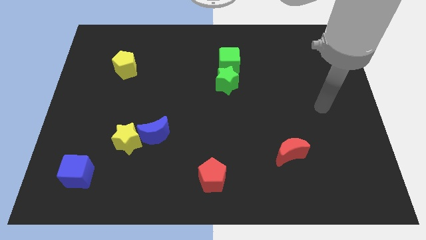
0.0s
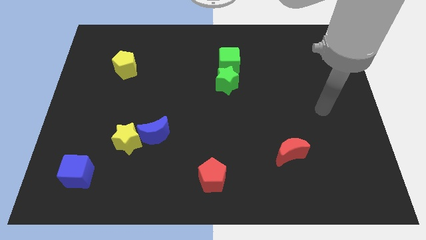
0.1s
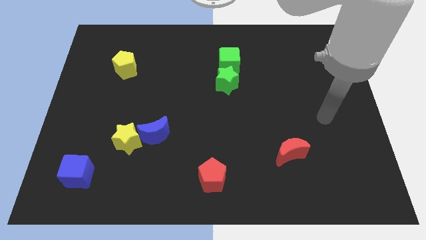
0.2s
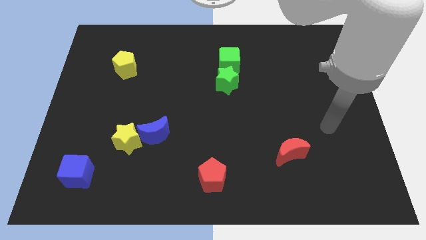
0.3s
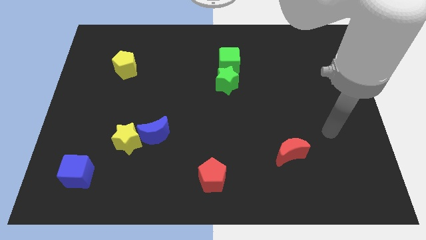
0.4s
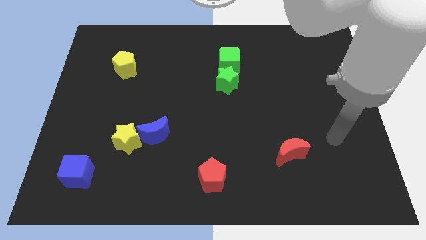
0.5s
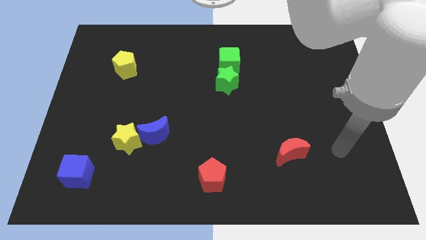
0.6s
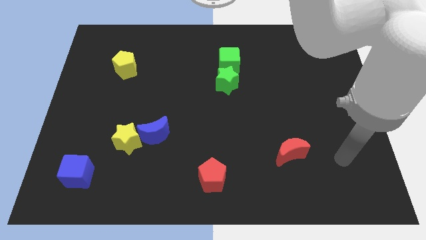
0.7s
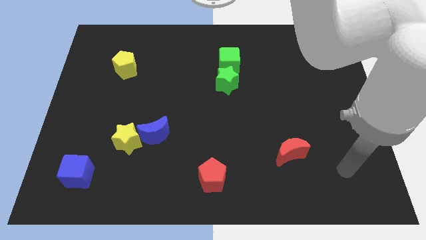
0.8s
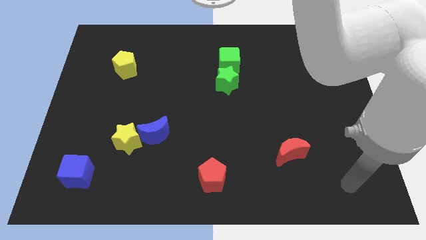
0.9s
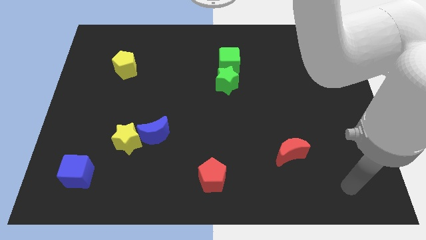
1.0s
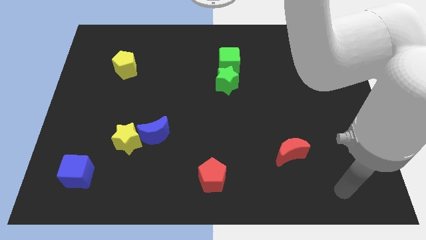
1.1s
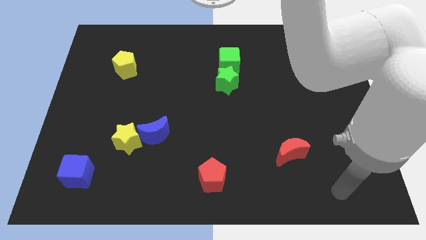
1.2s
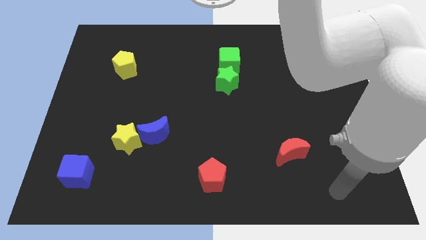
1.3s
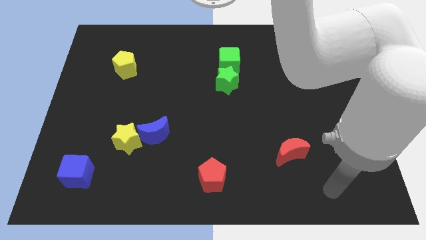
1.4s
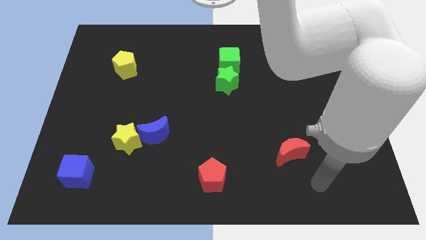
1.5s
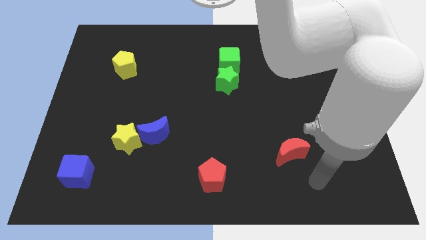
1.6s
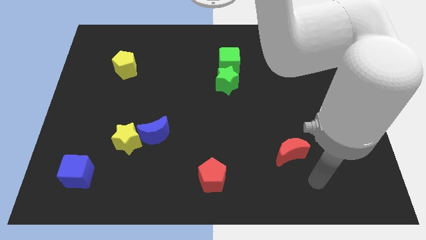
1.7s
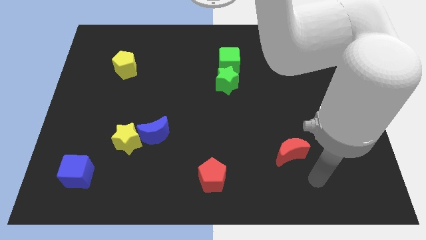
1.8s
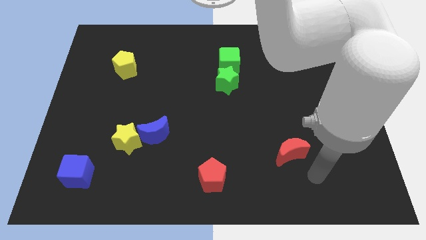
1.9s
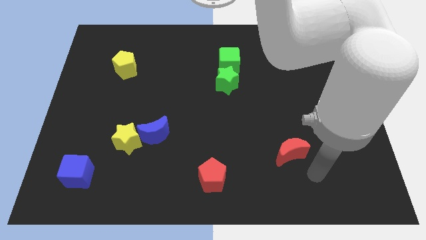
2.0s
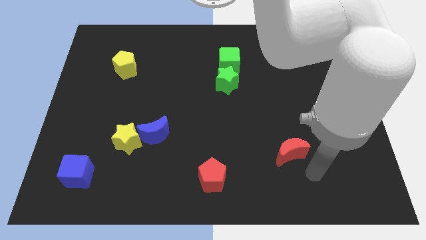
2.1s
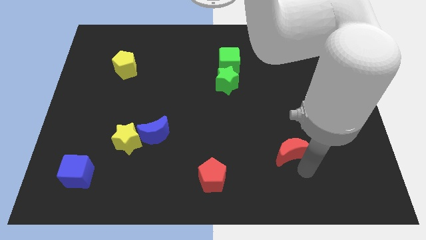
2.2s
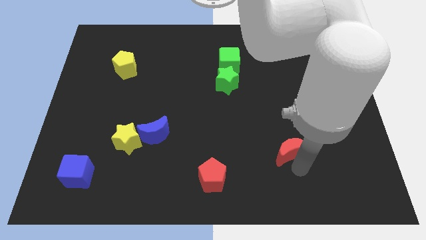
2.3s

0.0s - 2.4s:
move your arm towards the red moon

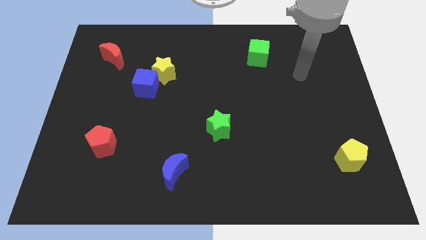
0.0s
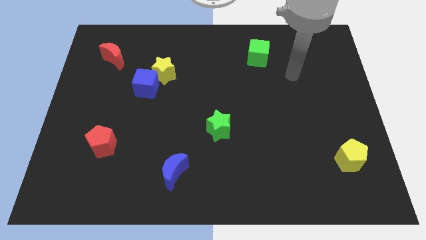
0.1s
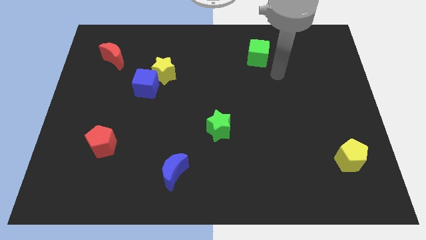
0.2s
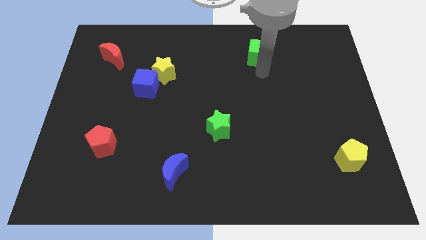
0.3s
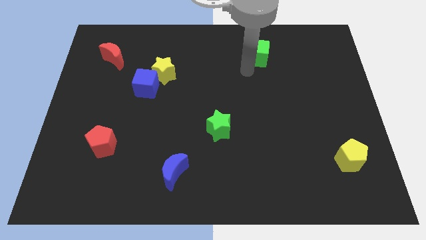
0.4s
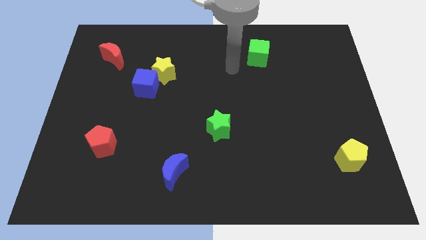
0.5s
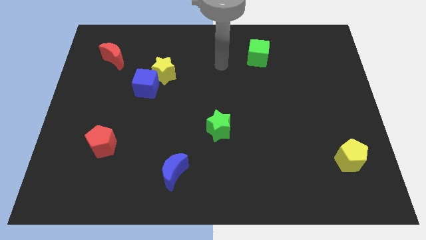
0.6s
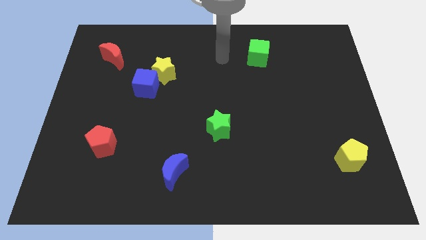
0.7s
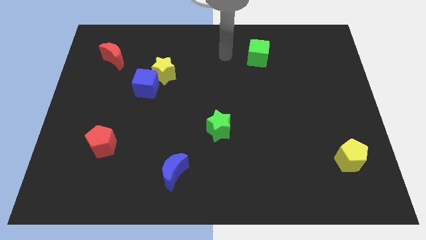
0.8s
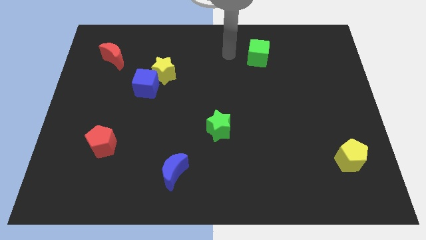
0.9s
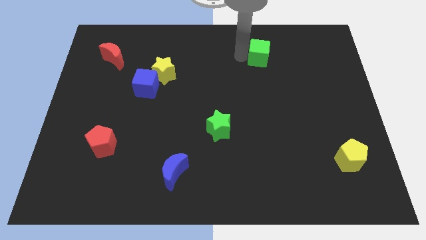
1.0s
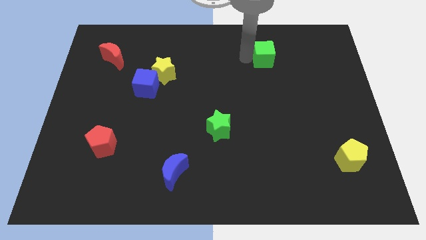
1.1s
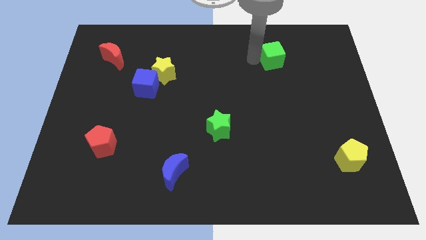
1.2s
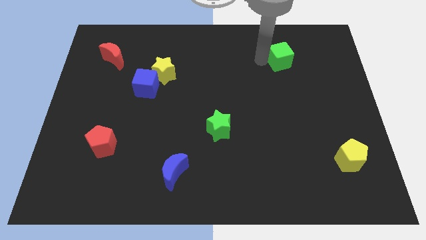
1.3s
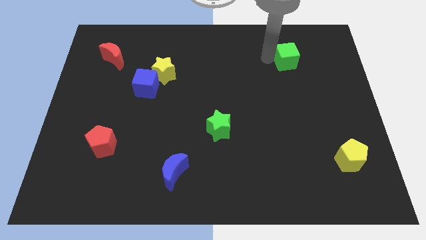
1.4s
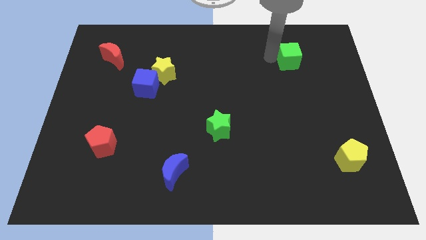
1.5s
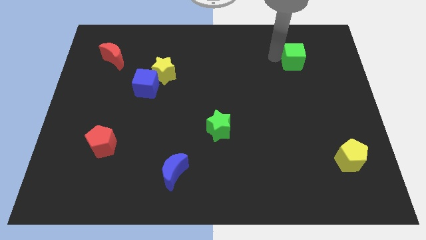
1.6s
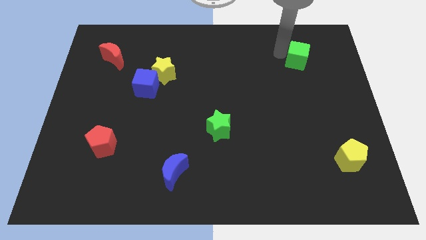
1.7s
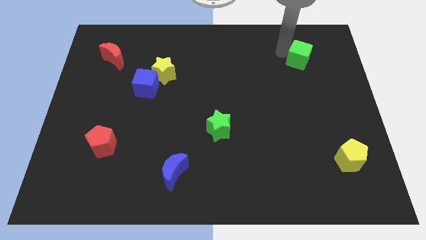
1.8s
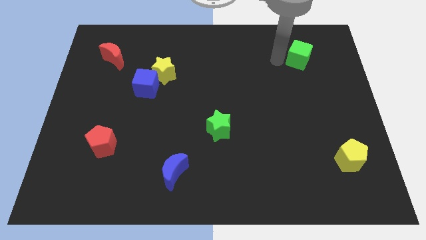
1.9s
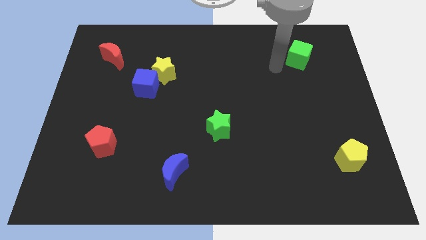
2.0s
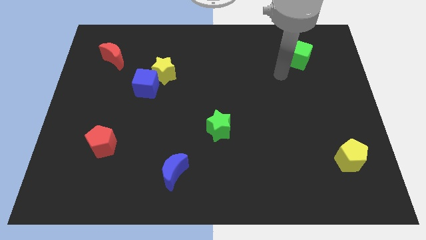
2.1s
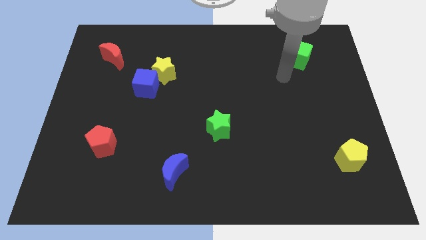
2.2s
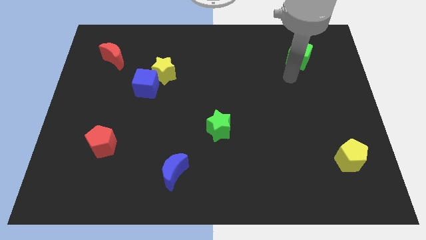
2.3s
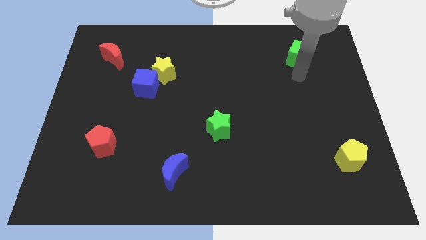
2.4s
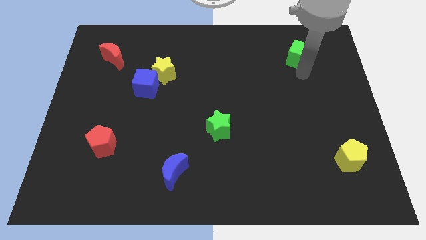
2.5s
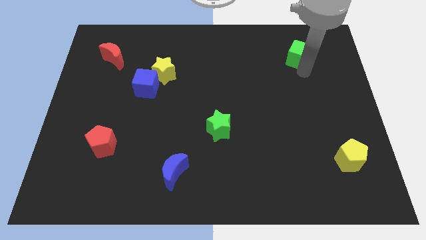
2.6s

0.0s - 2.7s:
move the green cube to the right side of the board

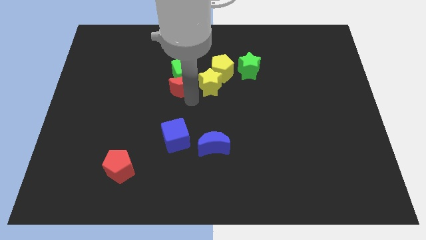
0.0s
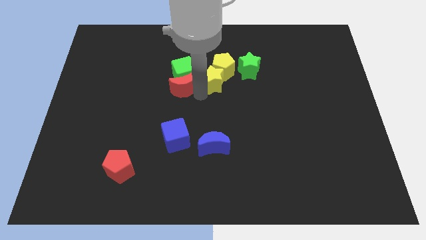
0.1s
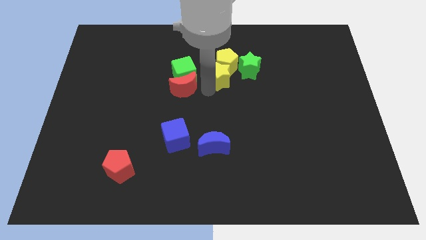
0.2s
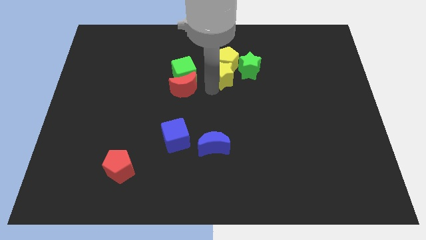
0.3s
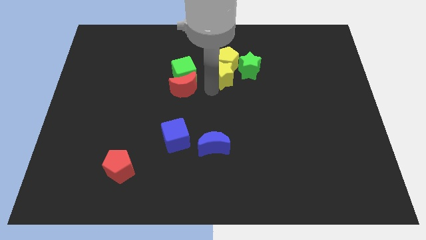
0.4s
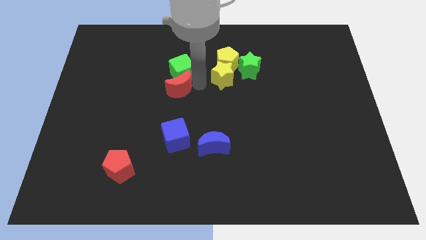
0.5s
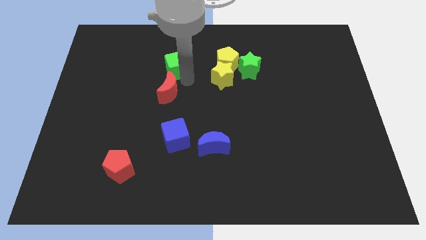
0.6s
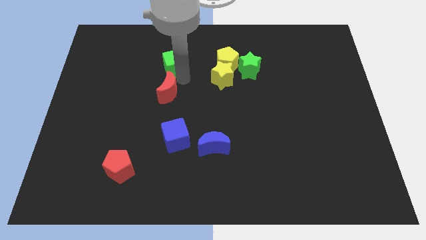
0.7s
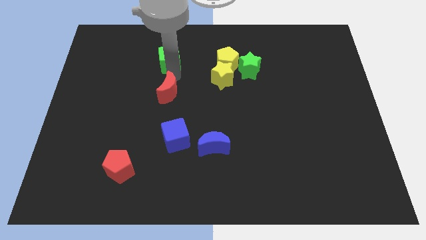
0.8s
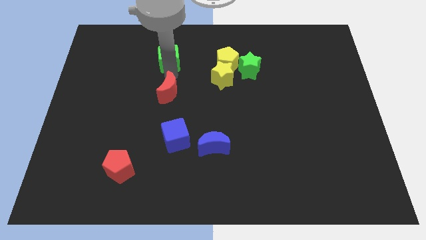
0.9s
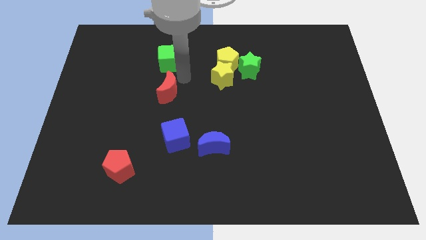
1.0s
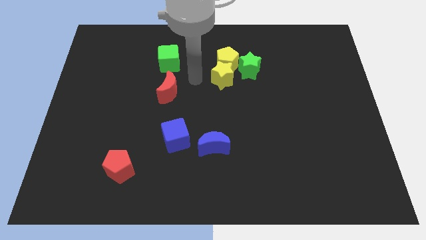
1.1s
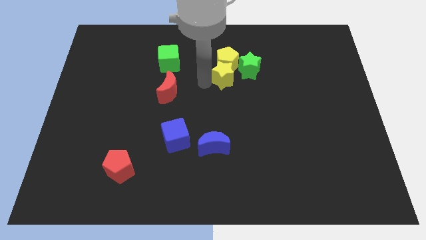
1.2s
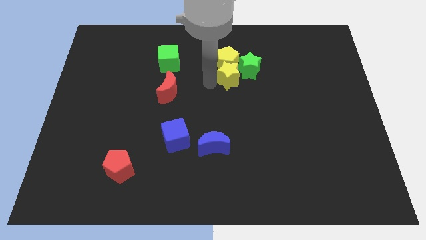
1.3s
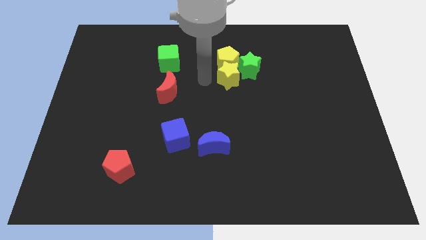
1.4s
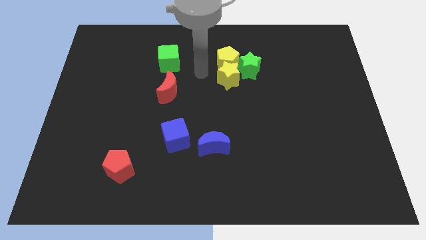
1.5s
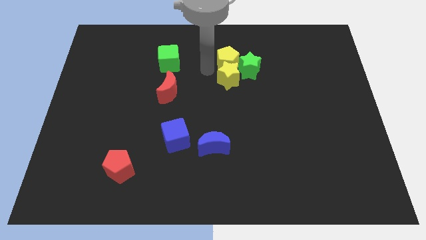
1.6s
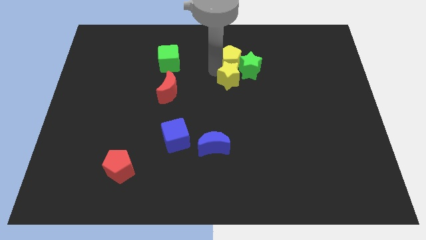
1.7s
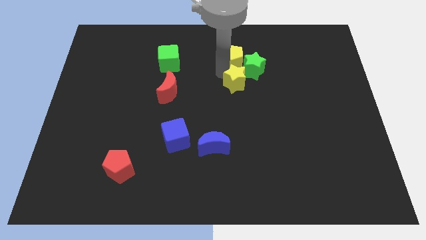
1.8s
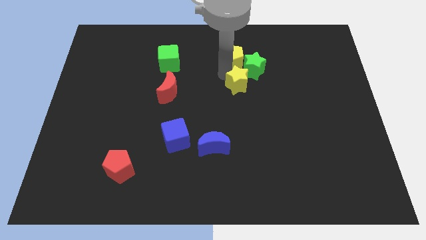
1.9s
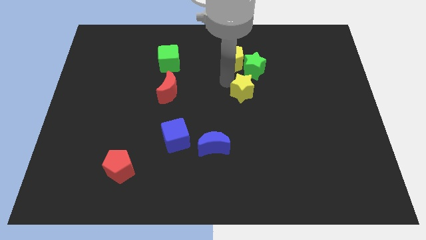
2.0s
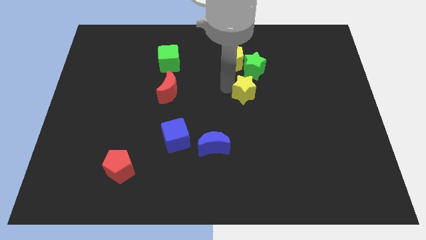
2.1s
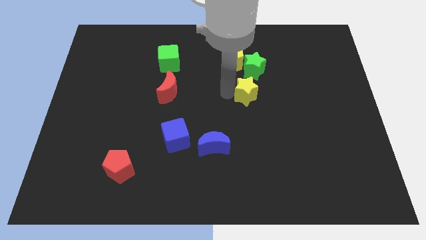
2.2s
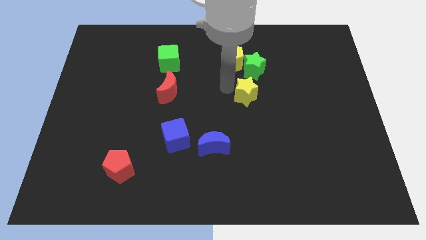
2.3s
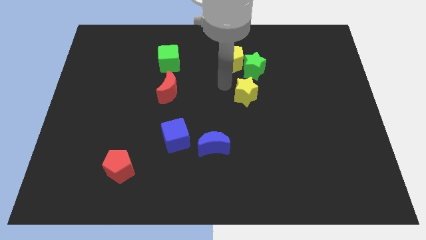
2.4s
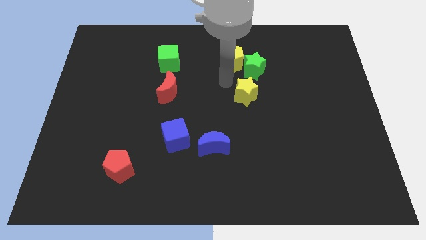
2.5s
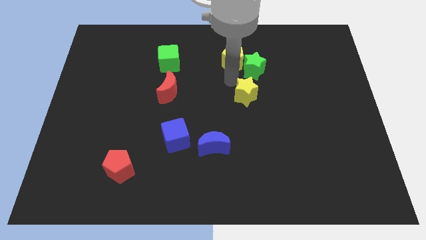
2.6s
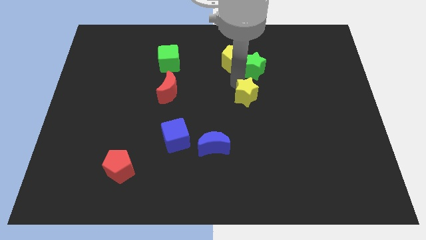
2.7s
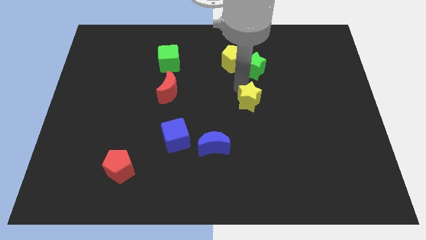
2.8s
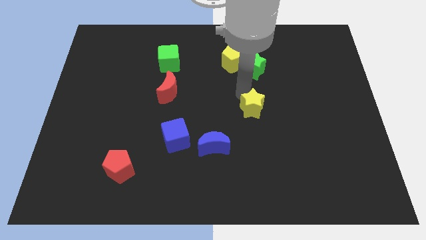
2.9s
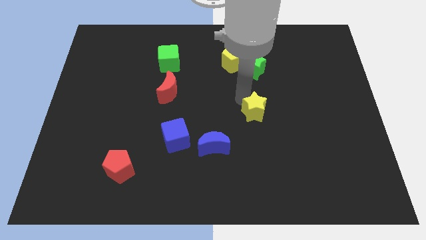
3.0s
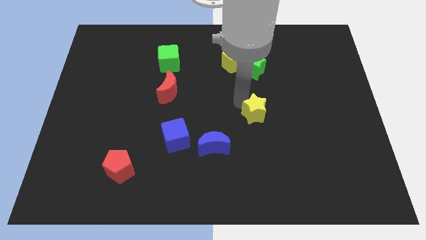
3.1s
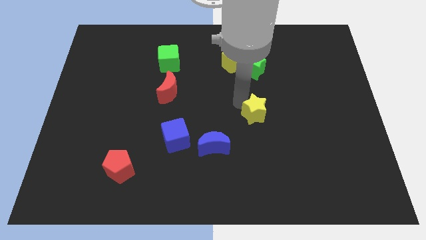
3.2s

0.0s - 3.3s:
separate the green cube and the yellow star

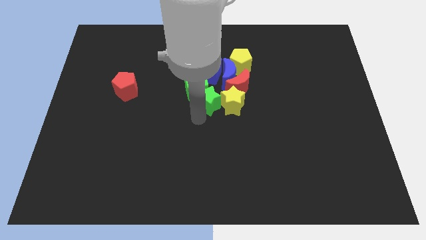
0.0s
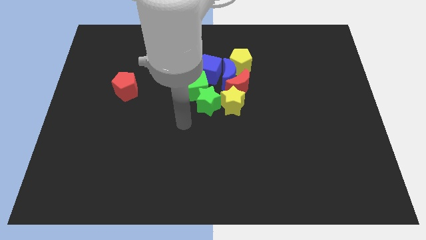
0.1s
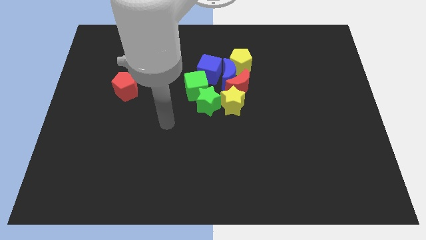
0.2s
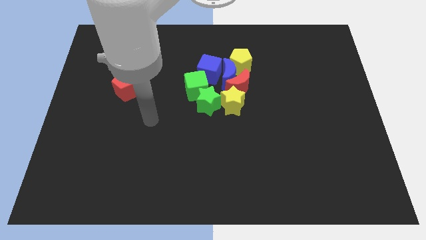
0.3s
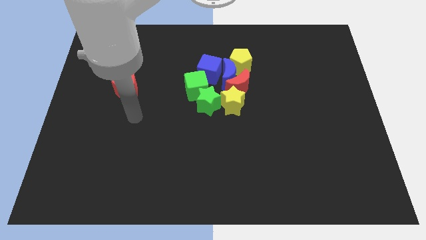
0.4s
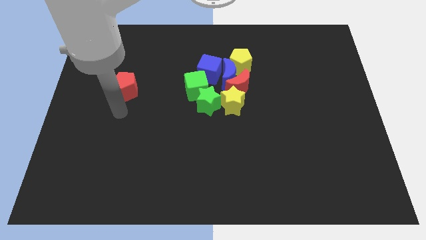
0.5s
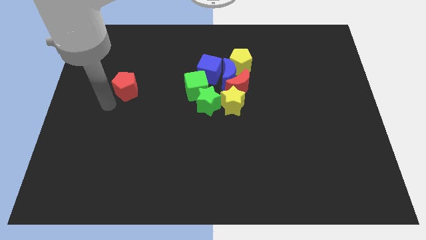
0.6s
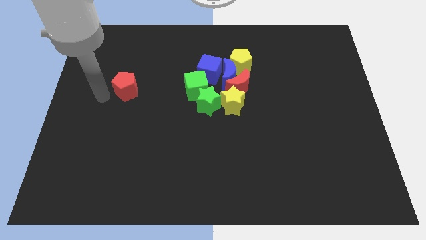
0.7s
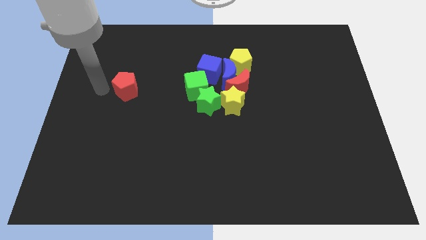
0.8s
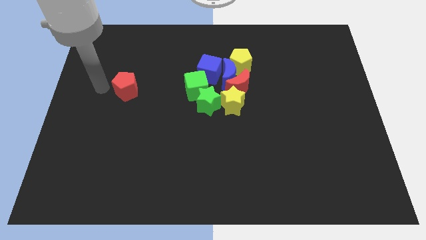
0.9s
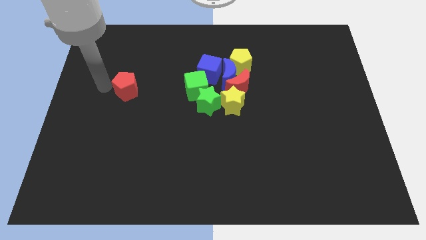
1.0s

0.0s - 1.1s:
move your arm to the left of red pentagon
